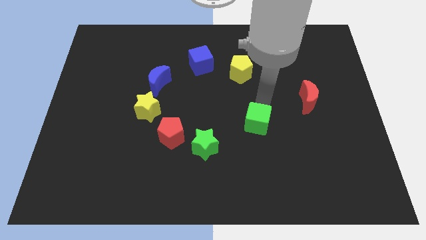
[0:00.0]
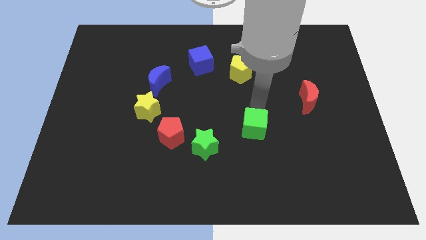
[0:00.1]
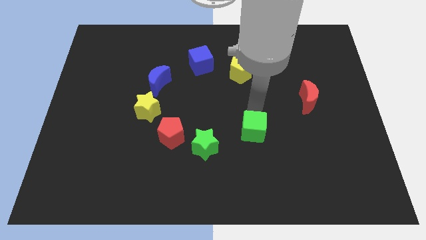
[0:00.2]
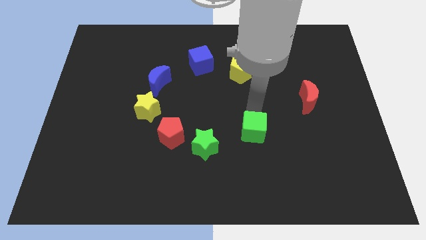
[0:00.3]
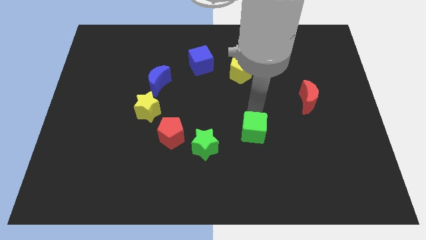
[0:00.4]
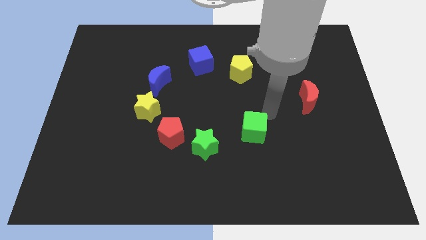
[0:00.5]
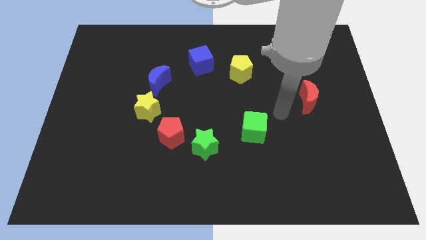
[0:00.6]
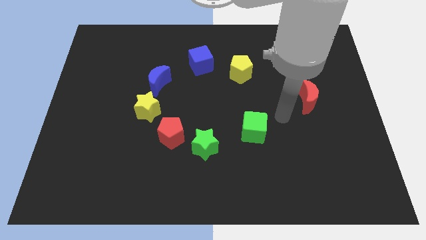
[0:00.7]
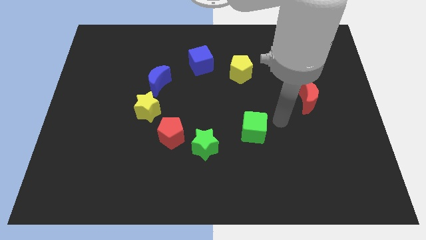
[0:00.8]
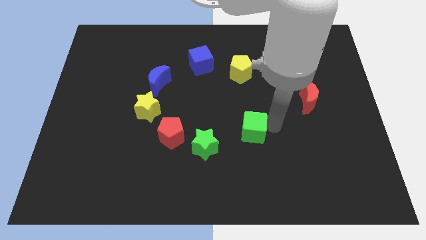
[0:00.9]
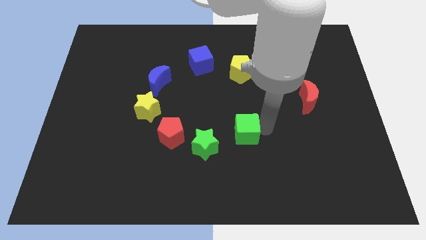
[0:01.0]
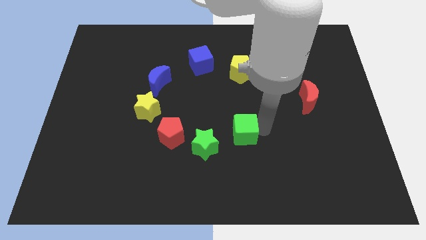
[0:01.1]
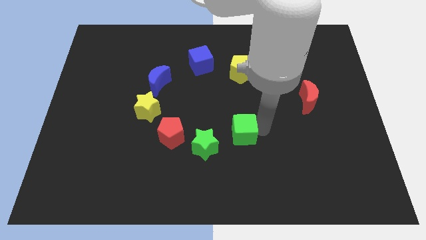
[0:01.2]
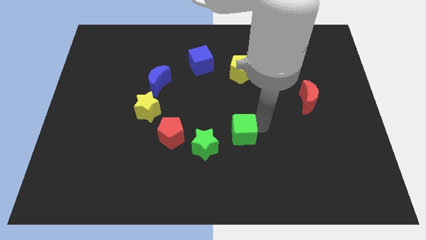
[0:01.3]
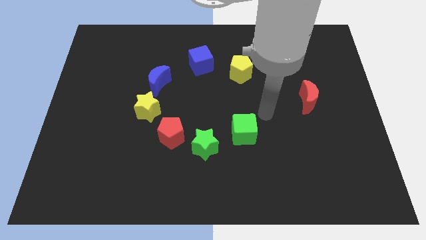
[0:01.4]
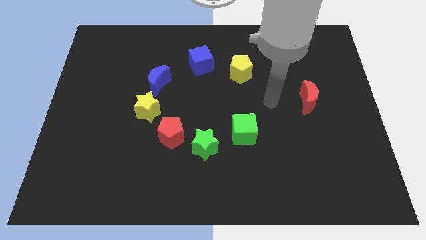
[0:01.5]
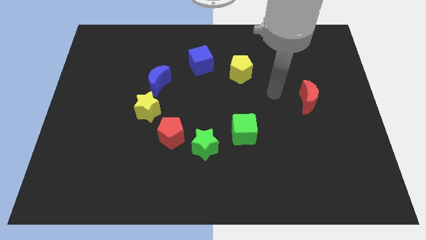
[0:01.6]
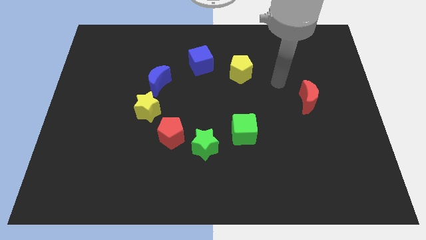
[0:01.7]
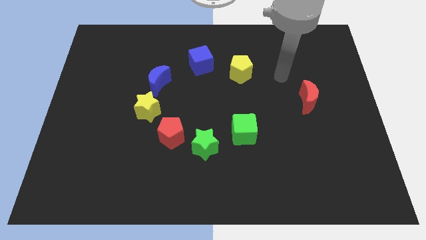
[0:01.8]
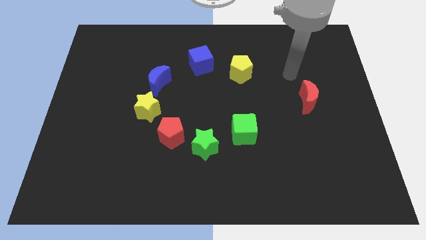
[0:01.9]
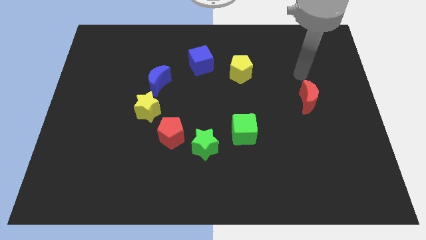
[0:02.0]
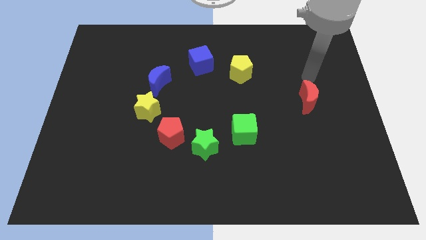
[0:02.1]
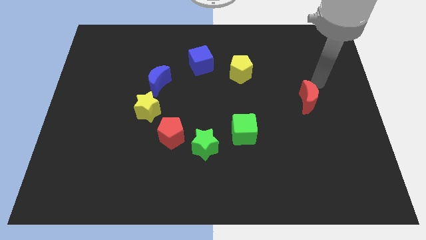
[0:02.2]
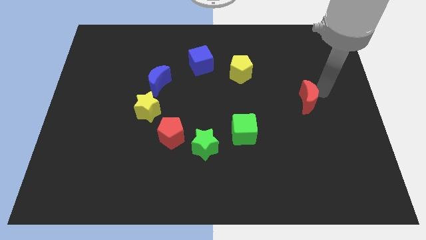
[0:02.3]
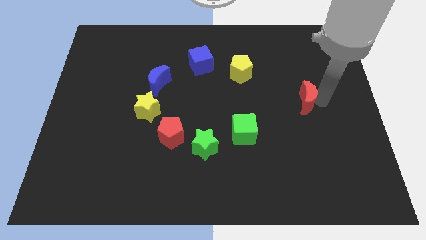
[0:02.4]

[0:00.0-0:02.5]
move the arm right to the red moon

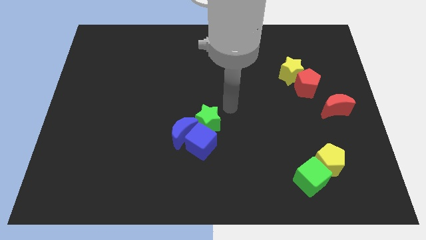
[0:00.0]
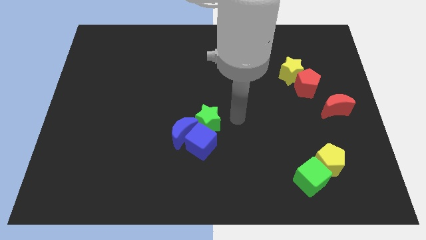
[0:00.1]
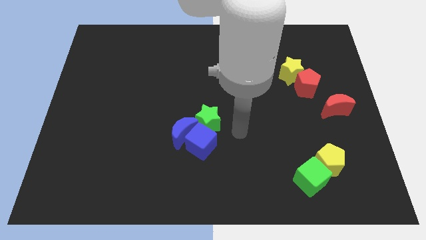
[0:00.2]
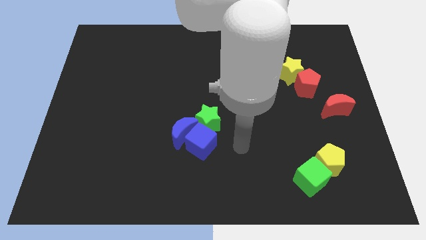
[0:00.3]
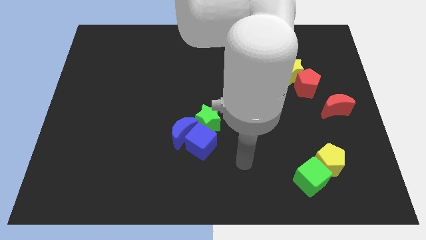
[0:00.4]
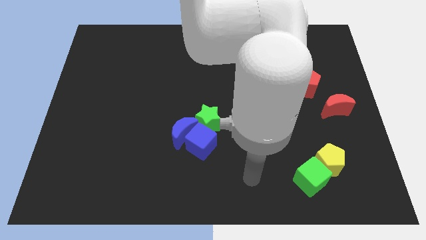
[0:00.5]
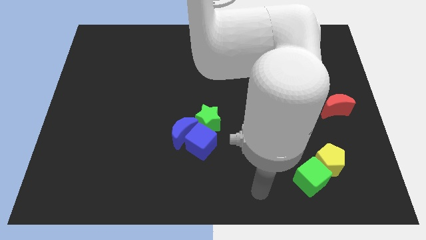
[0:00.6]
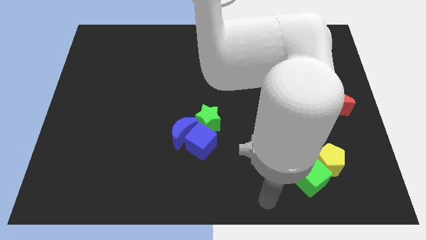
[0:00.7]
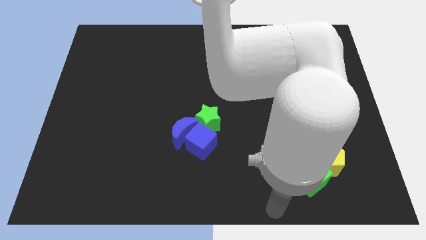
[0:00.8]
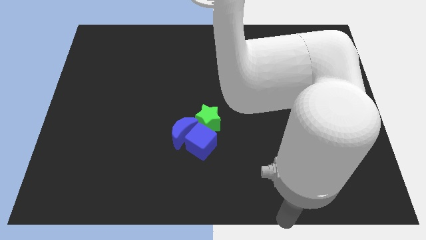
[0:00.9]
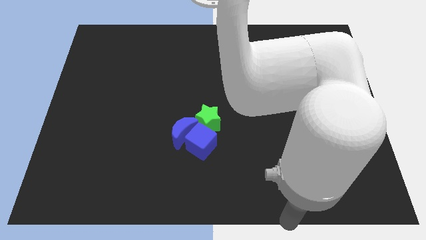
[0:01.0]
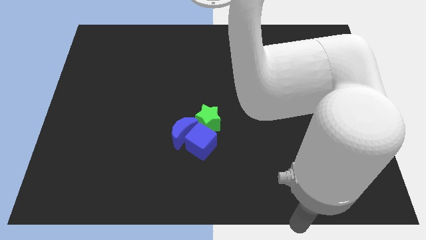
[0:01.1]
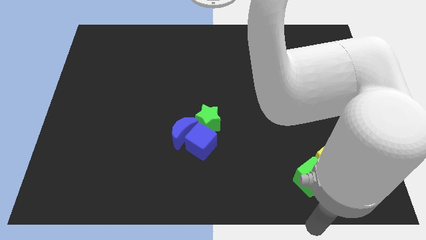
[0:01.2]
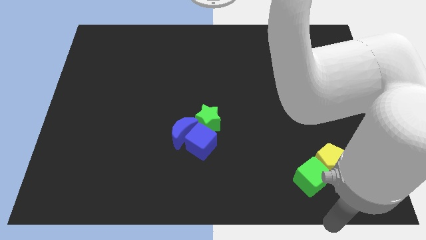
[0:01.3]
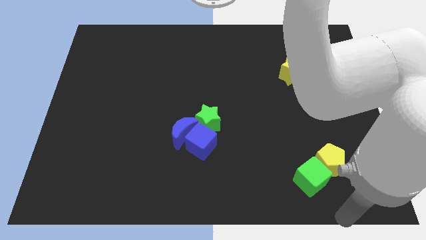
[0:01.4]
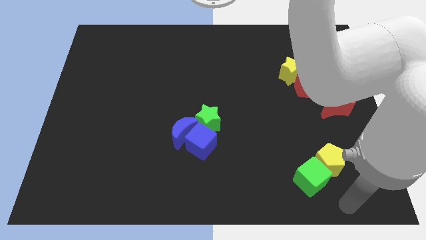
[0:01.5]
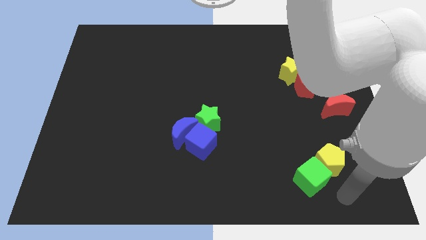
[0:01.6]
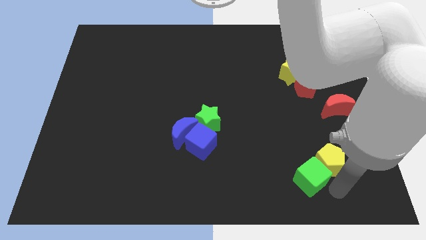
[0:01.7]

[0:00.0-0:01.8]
place your arm at the bottom of the green cube

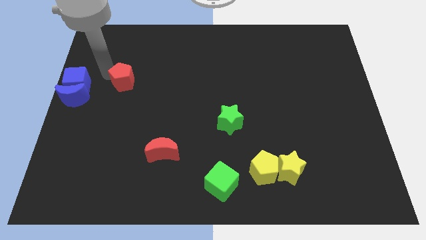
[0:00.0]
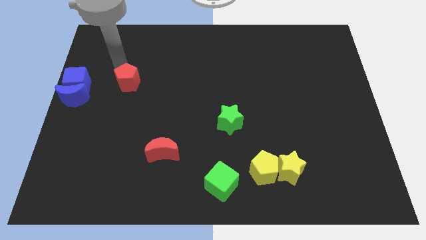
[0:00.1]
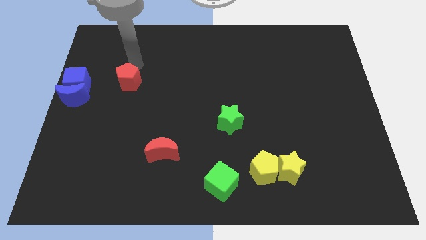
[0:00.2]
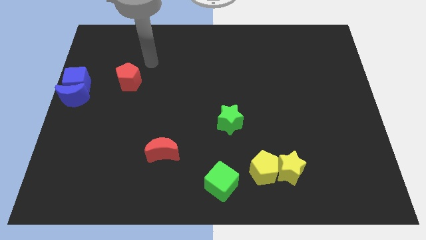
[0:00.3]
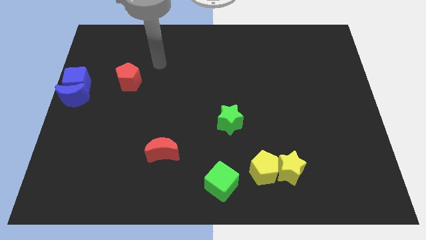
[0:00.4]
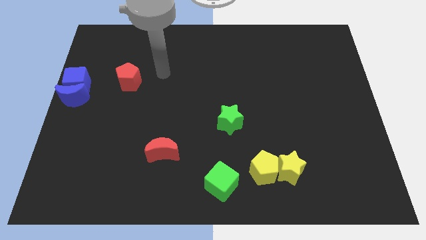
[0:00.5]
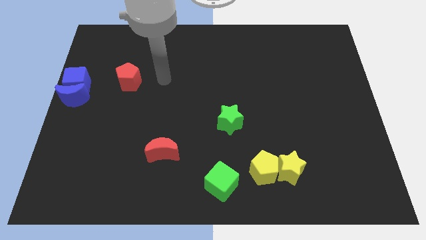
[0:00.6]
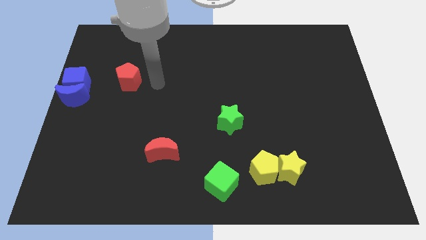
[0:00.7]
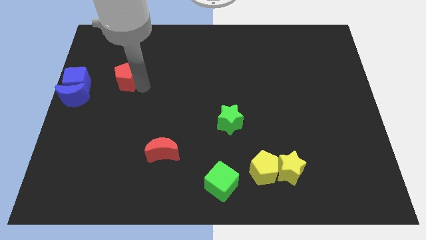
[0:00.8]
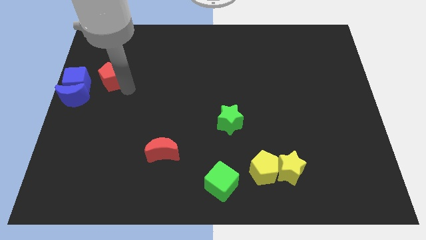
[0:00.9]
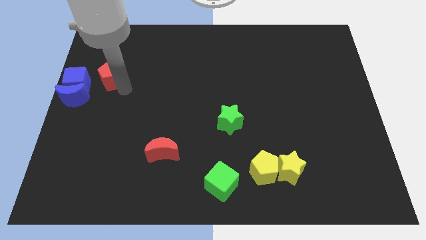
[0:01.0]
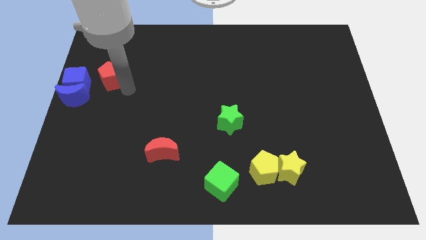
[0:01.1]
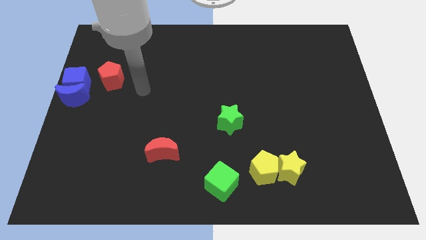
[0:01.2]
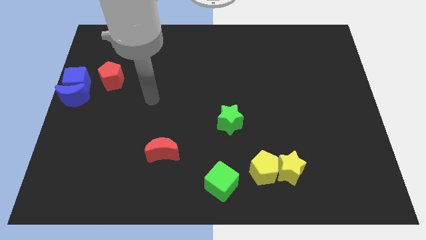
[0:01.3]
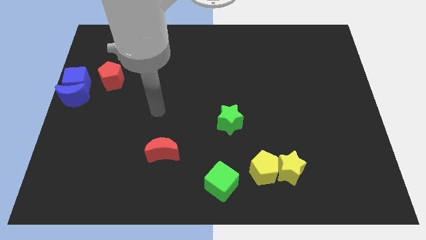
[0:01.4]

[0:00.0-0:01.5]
tap the red pentagon on the right side

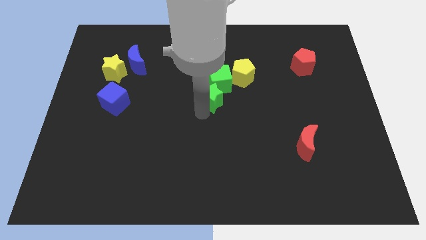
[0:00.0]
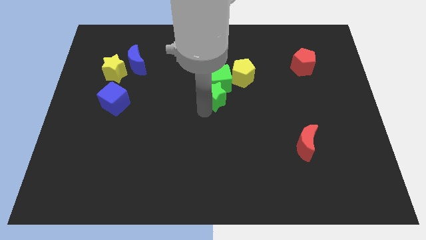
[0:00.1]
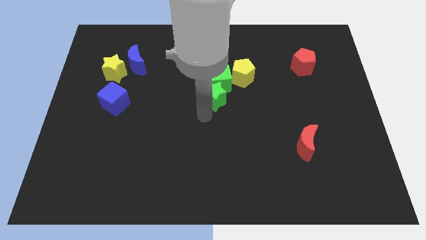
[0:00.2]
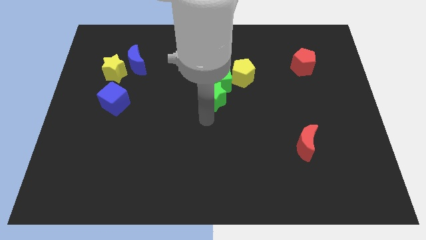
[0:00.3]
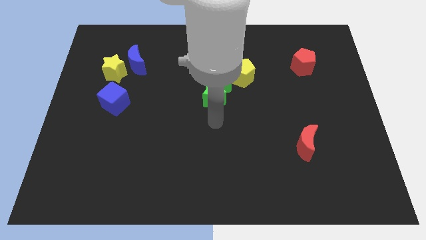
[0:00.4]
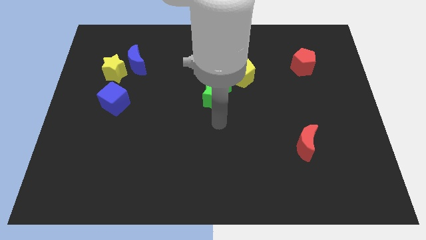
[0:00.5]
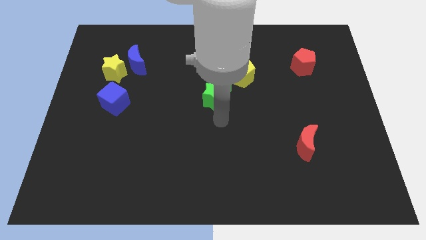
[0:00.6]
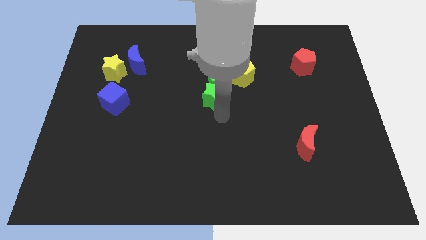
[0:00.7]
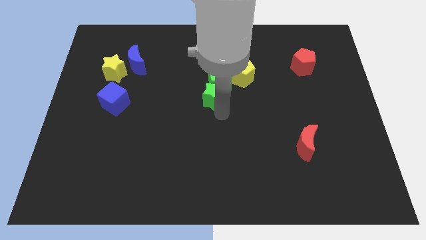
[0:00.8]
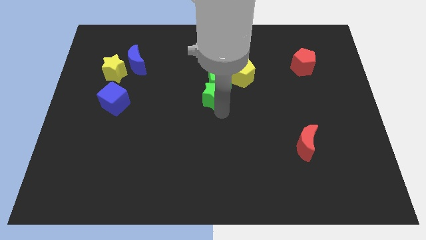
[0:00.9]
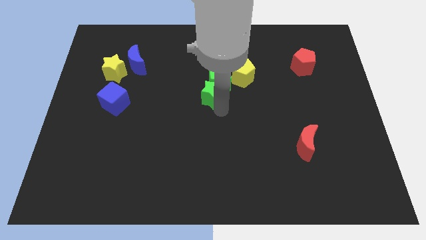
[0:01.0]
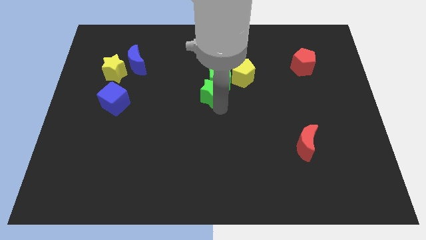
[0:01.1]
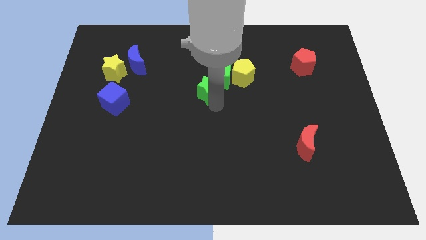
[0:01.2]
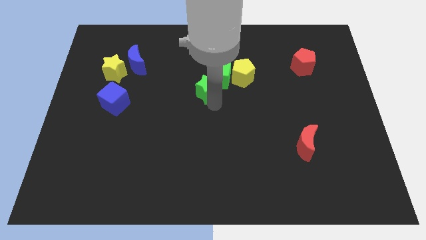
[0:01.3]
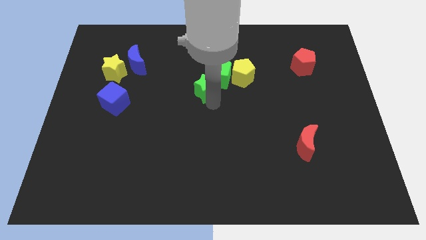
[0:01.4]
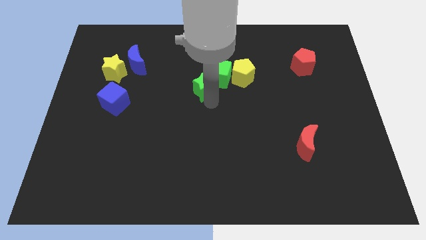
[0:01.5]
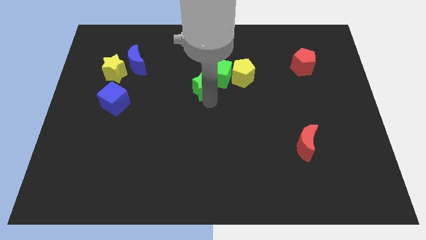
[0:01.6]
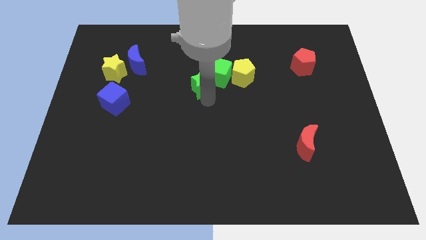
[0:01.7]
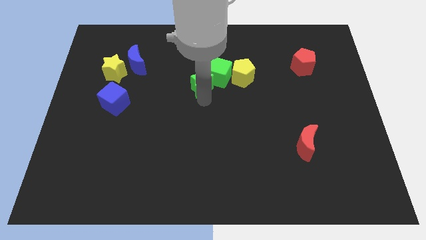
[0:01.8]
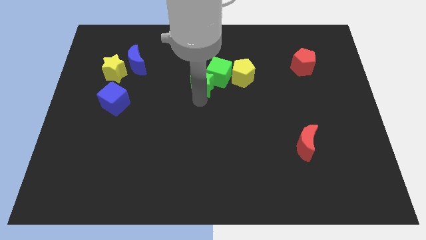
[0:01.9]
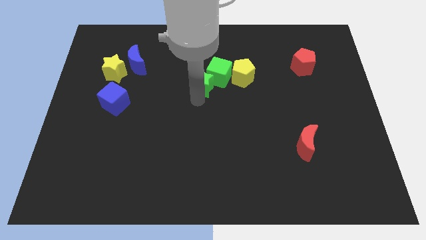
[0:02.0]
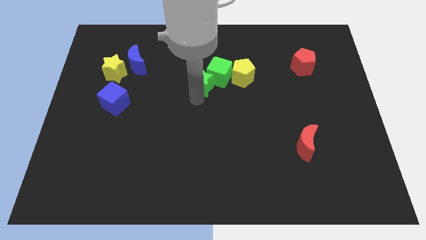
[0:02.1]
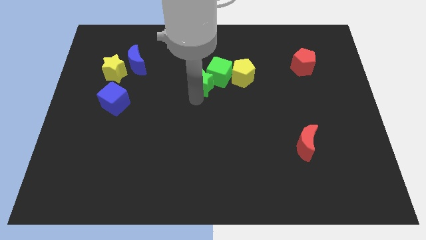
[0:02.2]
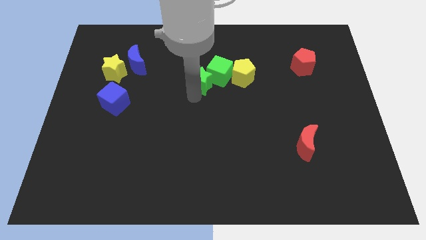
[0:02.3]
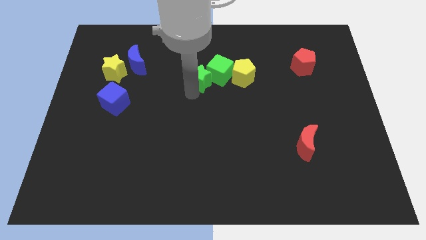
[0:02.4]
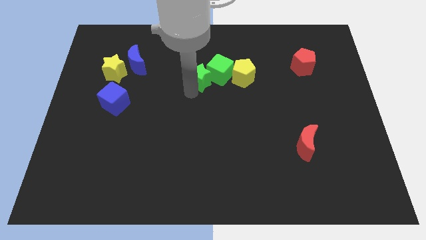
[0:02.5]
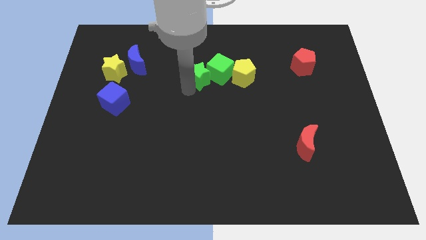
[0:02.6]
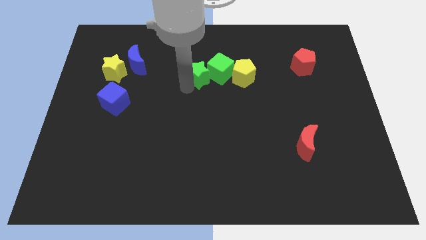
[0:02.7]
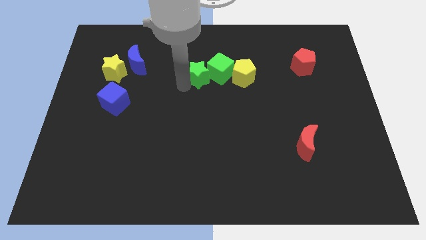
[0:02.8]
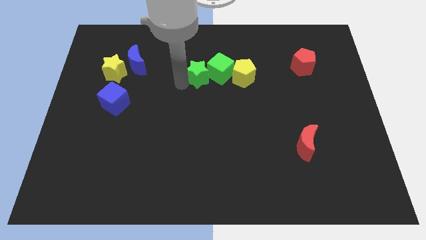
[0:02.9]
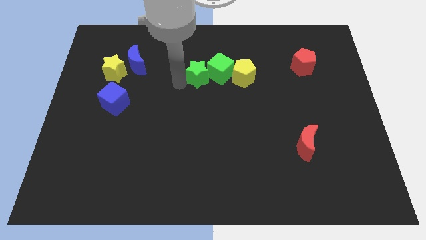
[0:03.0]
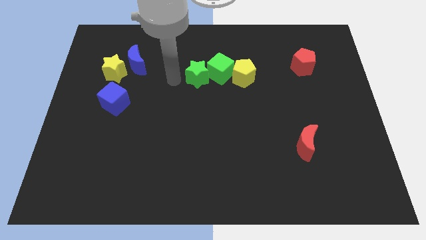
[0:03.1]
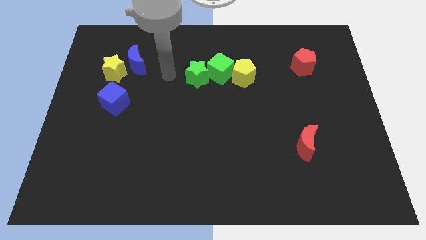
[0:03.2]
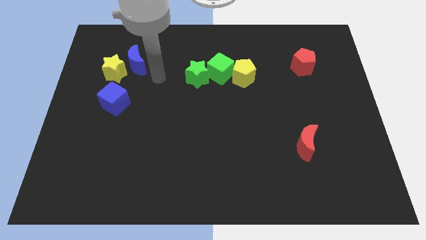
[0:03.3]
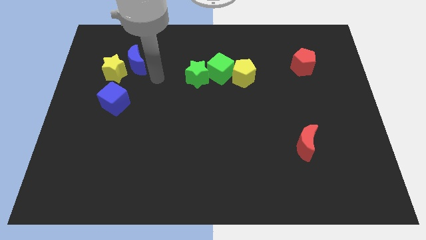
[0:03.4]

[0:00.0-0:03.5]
move the green blocks on the left side of the yellow pentagon
